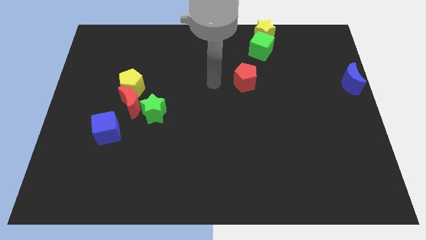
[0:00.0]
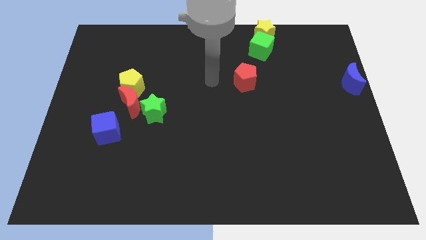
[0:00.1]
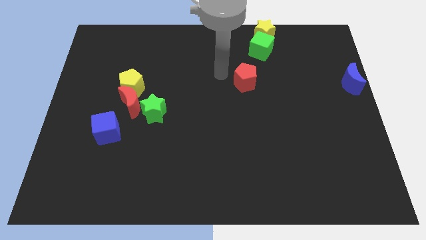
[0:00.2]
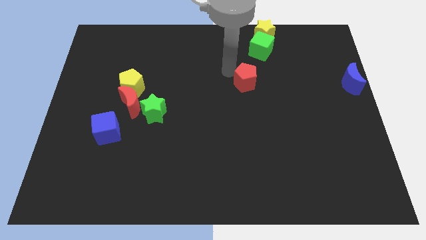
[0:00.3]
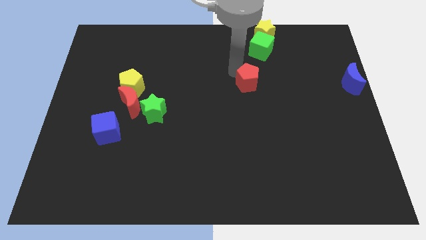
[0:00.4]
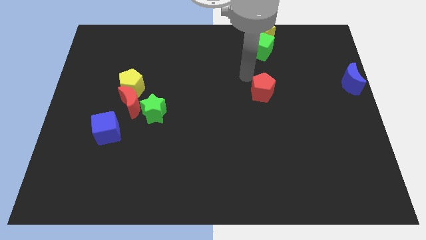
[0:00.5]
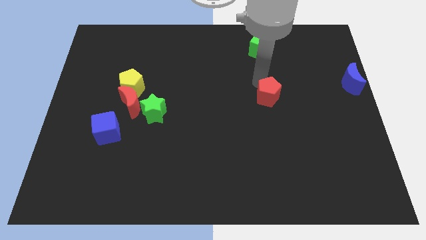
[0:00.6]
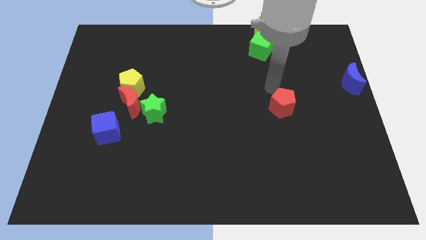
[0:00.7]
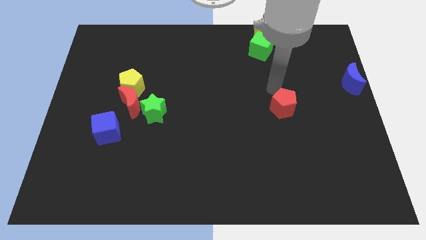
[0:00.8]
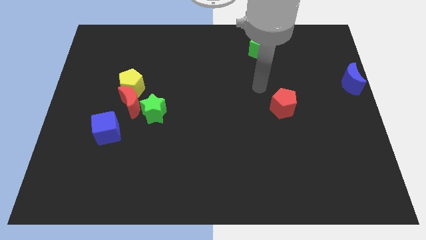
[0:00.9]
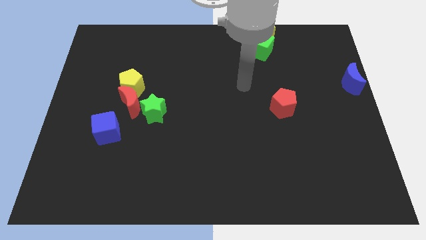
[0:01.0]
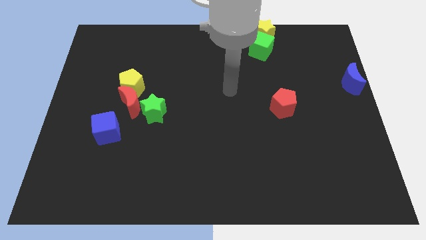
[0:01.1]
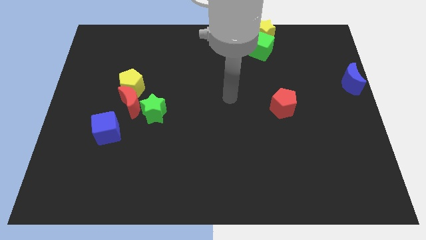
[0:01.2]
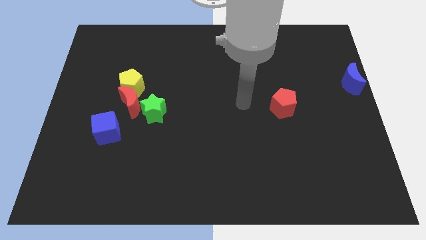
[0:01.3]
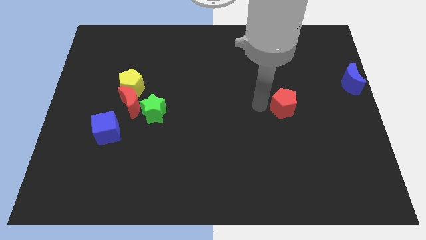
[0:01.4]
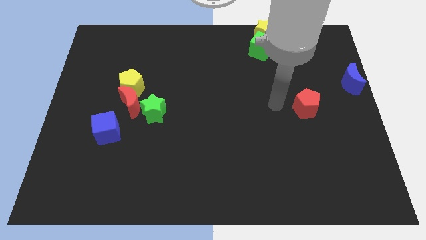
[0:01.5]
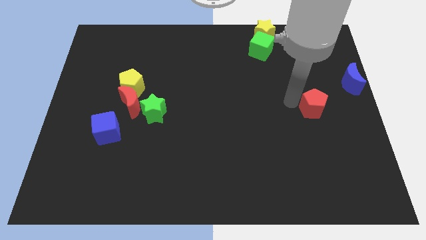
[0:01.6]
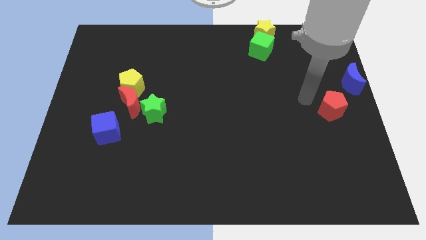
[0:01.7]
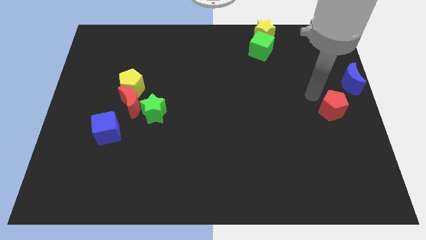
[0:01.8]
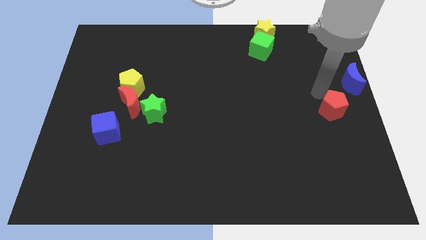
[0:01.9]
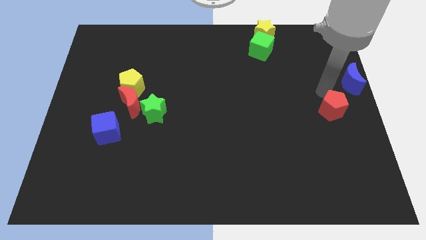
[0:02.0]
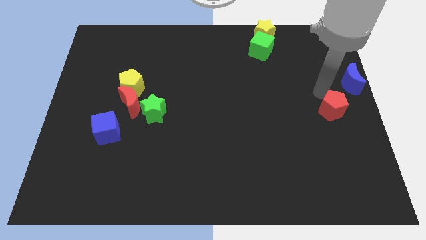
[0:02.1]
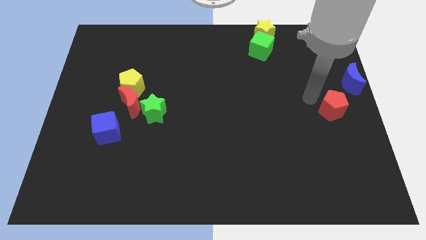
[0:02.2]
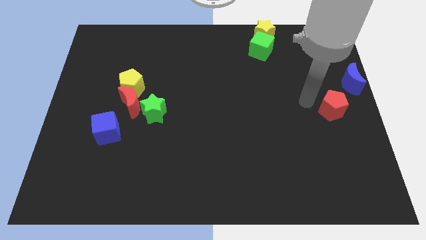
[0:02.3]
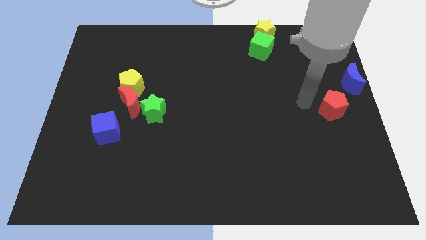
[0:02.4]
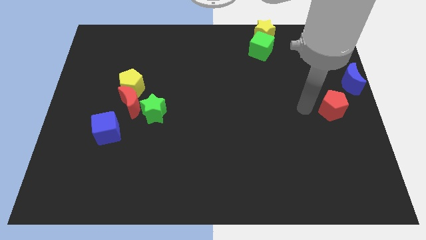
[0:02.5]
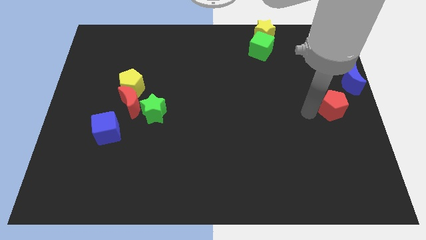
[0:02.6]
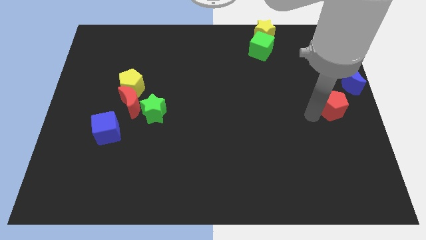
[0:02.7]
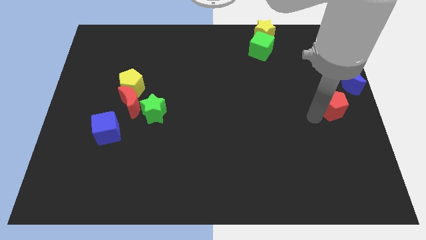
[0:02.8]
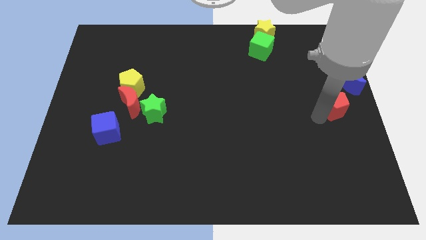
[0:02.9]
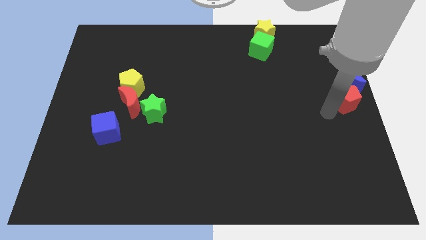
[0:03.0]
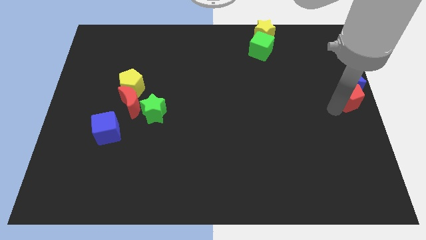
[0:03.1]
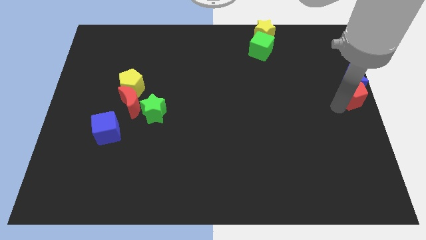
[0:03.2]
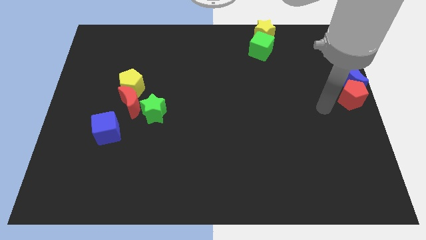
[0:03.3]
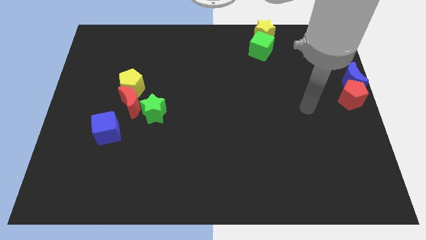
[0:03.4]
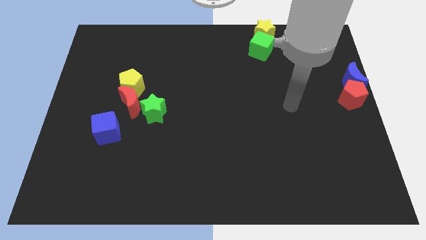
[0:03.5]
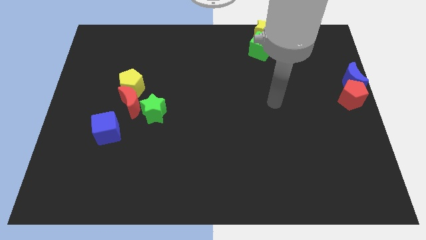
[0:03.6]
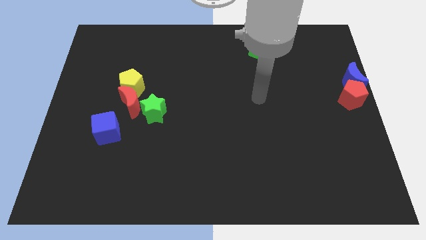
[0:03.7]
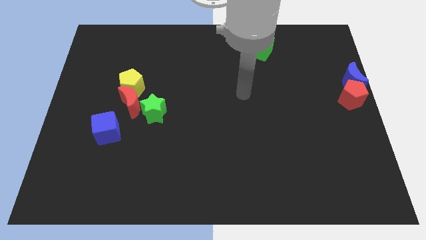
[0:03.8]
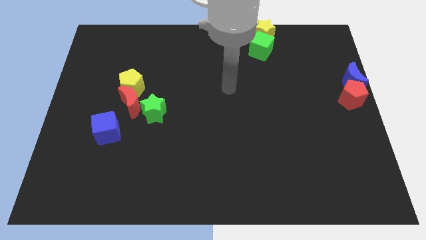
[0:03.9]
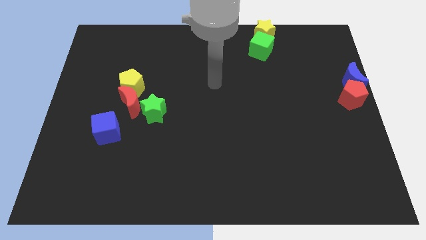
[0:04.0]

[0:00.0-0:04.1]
place the red pentagon close to the blue crescent

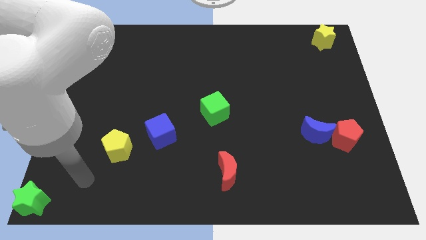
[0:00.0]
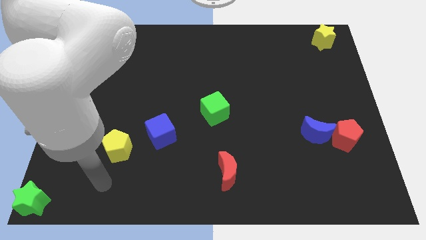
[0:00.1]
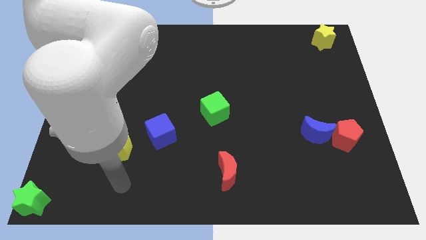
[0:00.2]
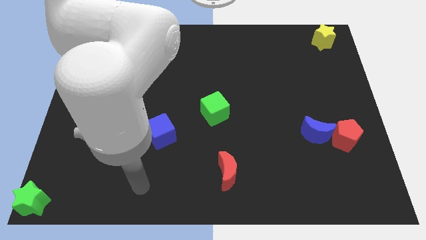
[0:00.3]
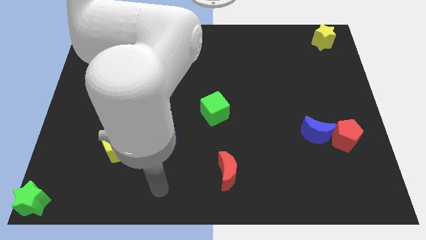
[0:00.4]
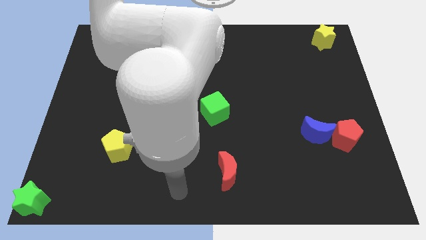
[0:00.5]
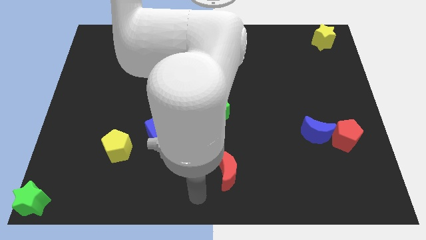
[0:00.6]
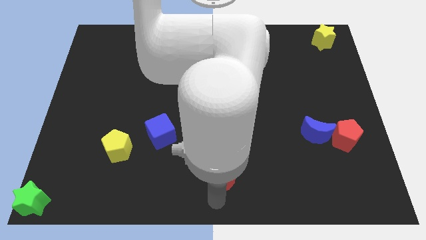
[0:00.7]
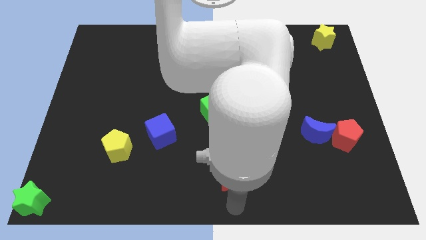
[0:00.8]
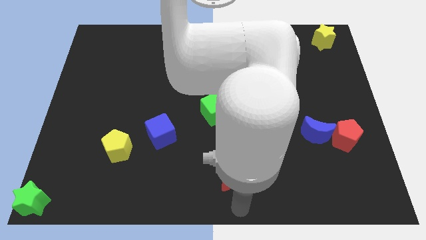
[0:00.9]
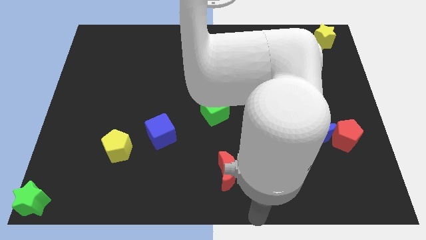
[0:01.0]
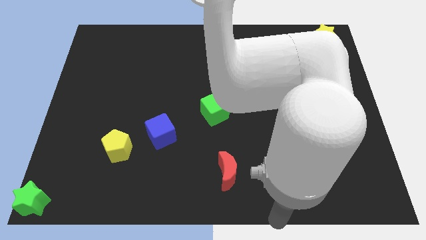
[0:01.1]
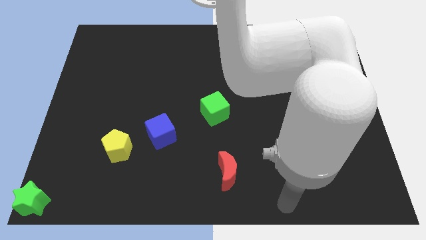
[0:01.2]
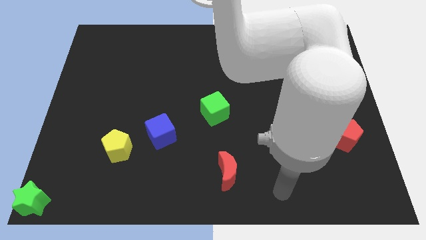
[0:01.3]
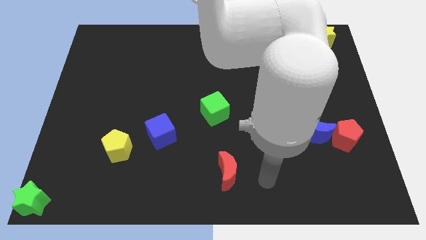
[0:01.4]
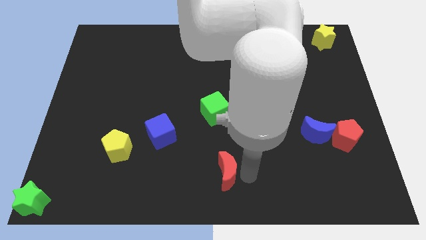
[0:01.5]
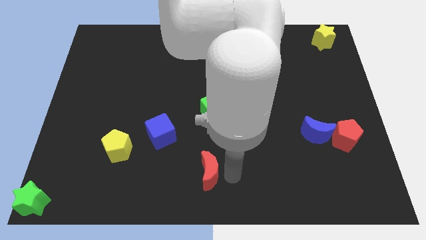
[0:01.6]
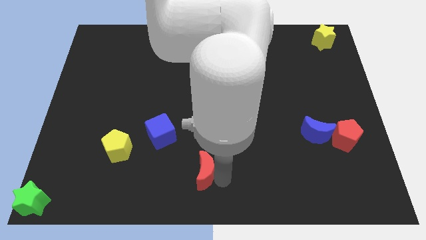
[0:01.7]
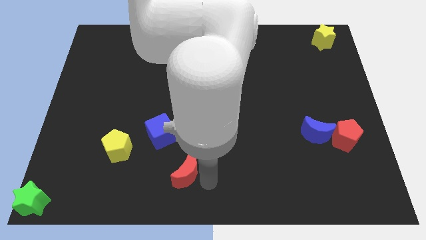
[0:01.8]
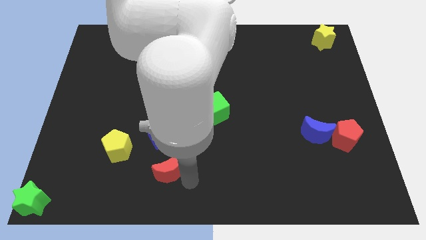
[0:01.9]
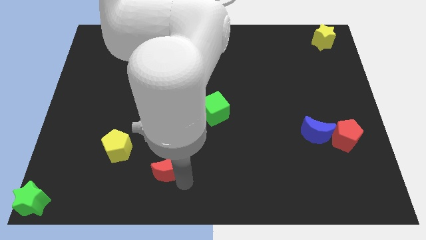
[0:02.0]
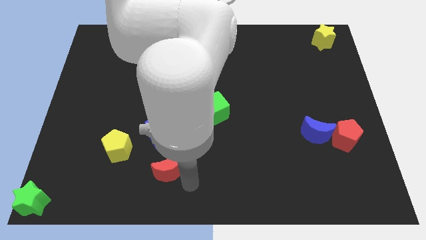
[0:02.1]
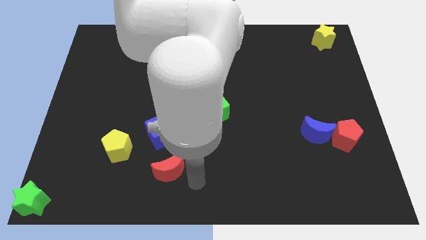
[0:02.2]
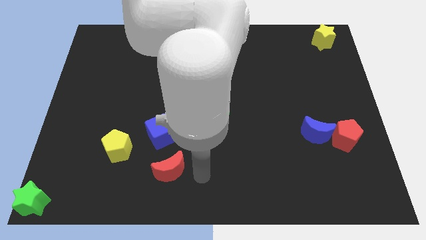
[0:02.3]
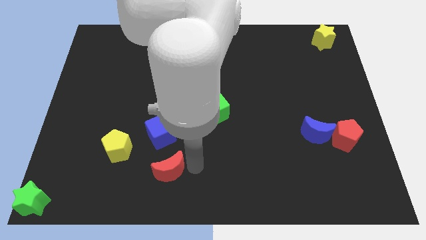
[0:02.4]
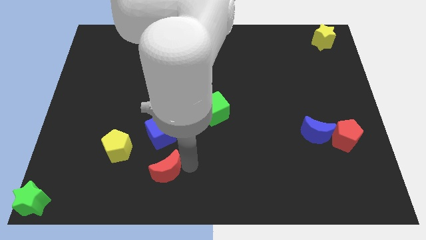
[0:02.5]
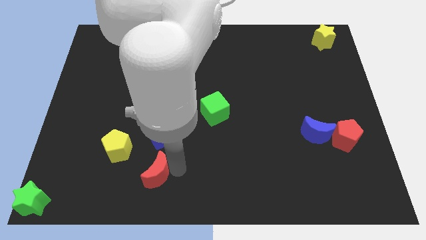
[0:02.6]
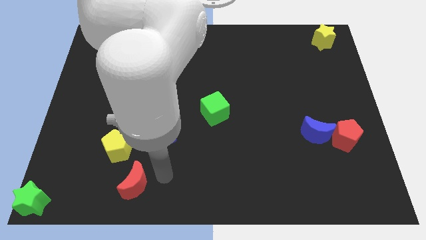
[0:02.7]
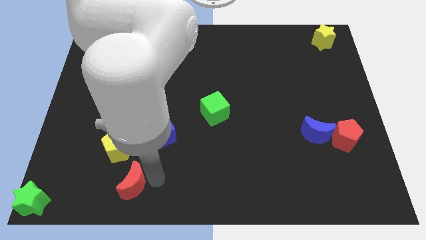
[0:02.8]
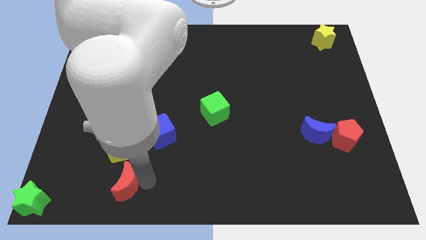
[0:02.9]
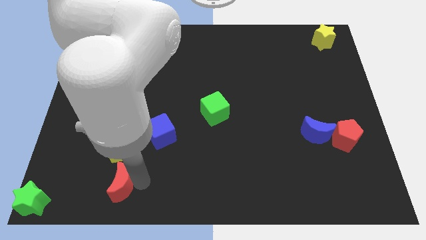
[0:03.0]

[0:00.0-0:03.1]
place red moon below yellow pentagon

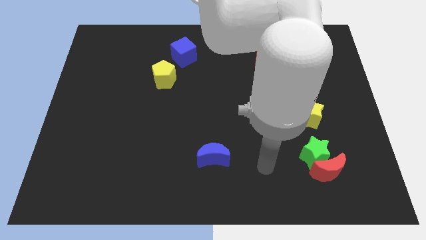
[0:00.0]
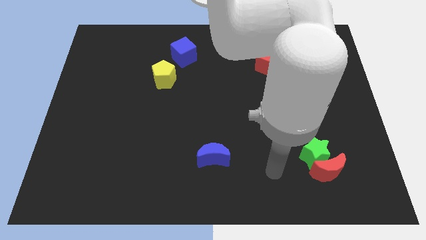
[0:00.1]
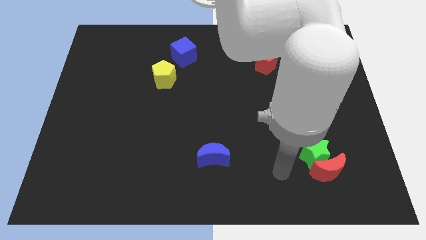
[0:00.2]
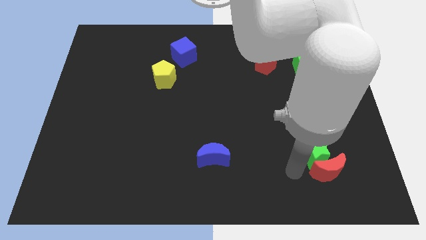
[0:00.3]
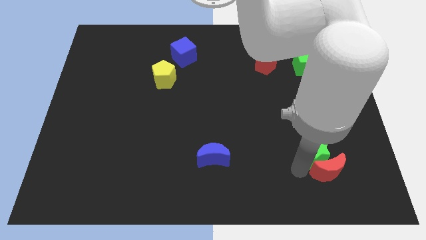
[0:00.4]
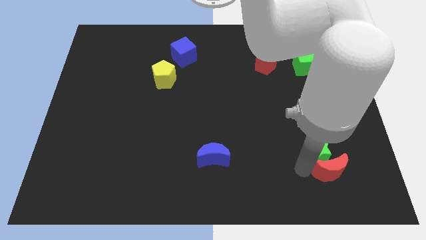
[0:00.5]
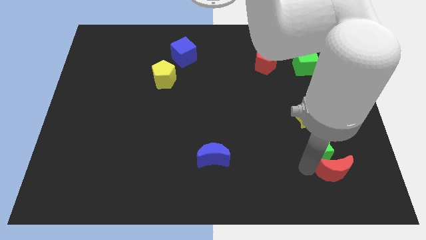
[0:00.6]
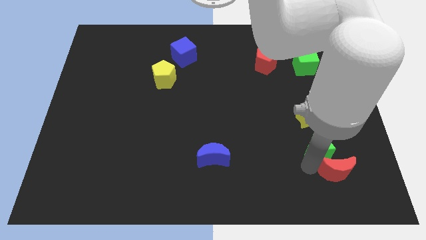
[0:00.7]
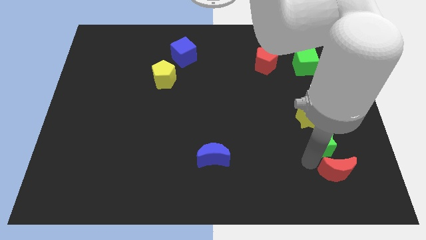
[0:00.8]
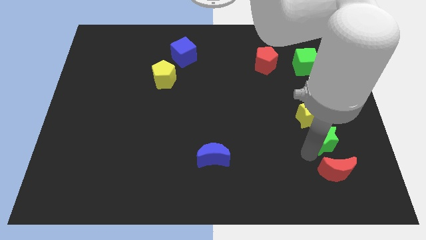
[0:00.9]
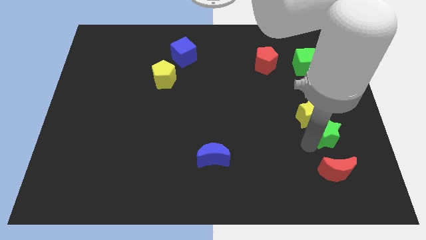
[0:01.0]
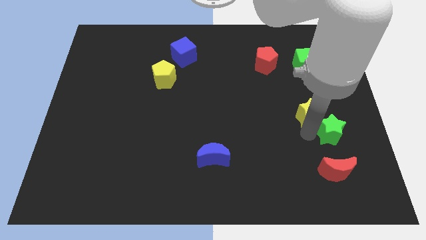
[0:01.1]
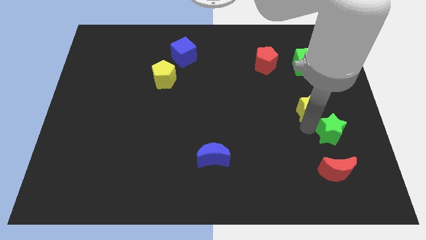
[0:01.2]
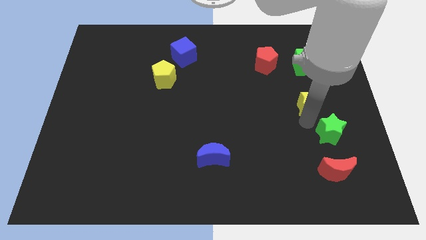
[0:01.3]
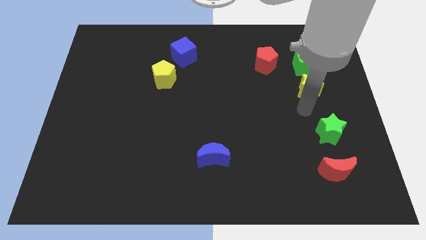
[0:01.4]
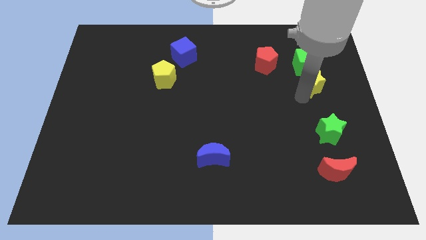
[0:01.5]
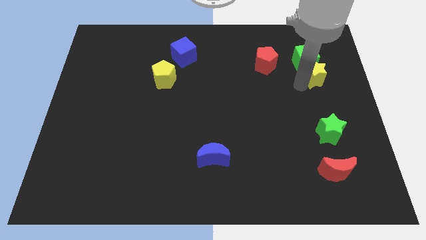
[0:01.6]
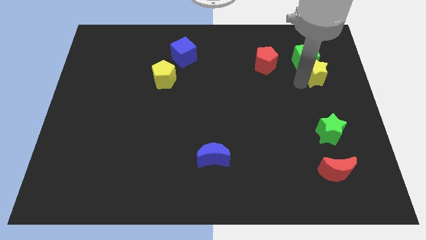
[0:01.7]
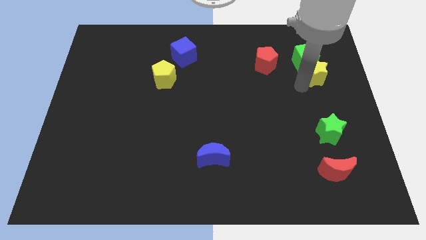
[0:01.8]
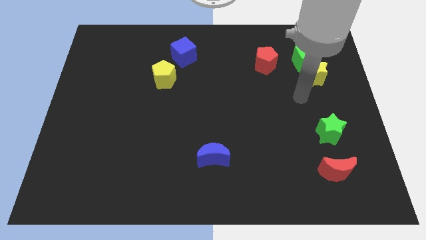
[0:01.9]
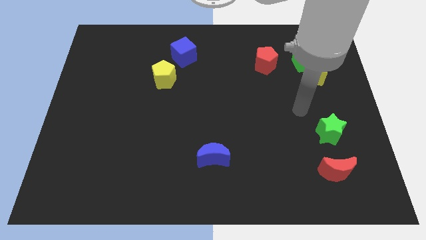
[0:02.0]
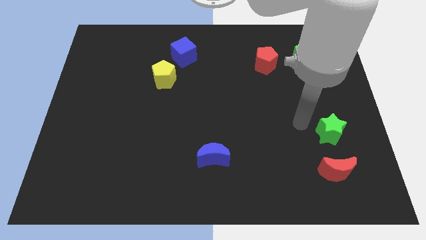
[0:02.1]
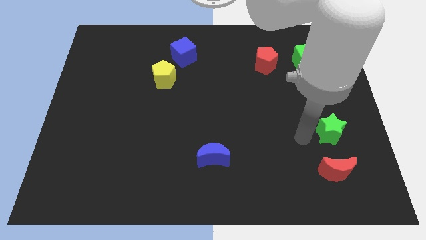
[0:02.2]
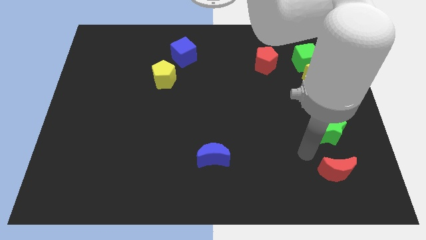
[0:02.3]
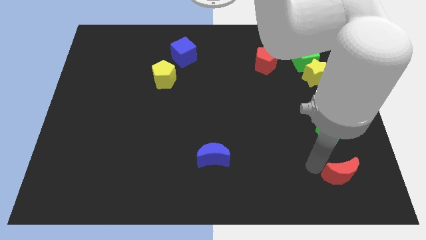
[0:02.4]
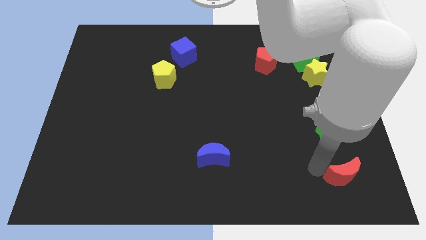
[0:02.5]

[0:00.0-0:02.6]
move the green star and the yellow star up slightly
